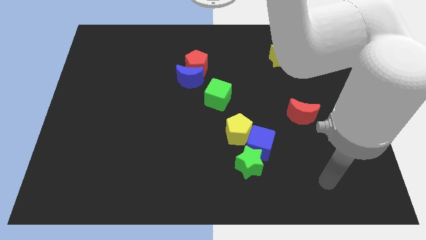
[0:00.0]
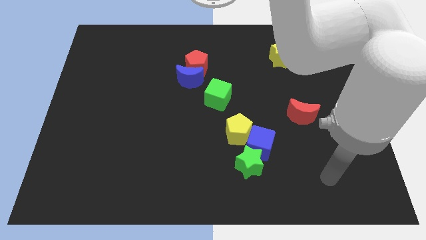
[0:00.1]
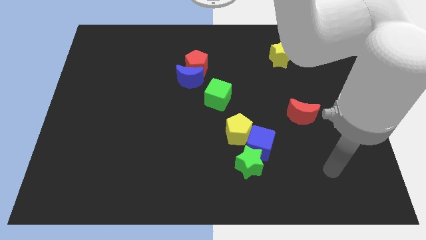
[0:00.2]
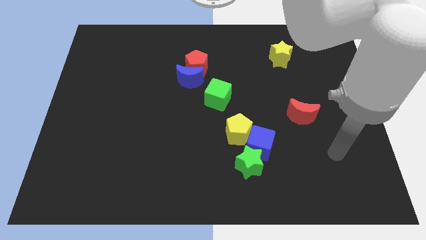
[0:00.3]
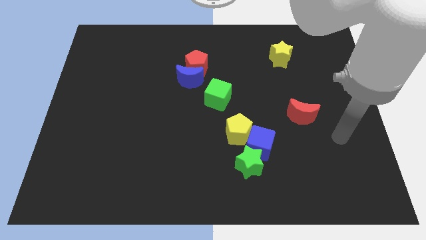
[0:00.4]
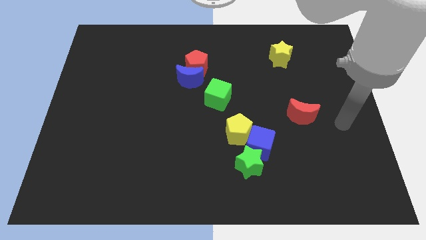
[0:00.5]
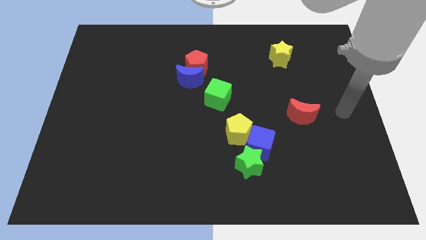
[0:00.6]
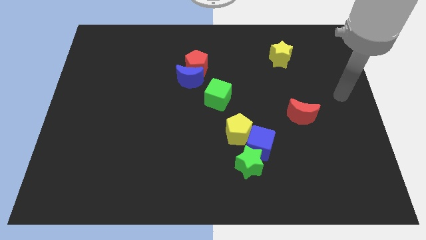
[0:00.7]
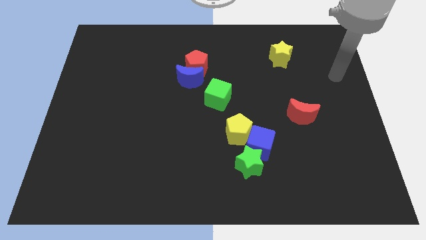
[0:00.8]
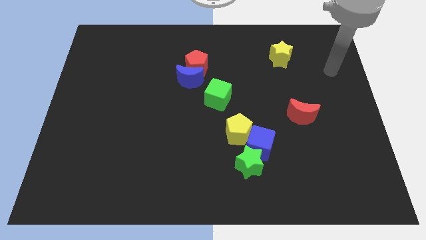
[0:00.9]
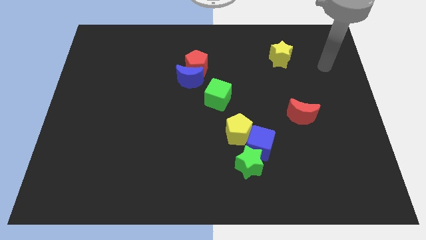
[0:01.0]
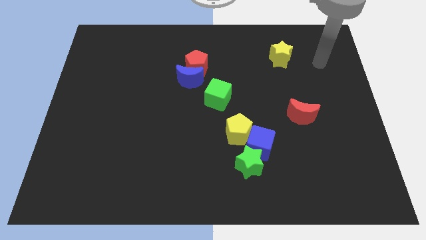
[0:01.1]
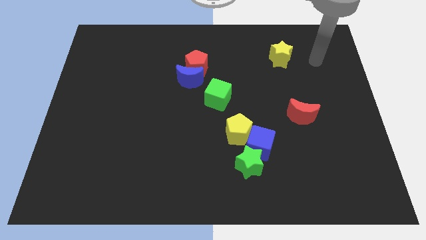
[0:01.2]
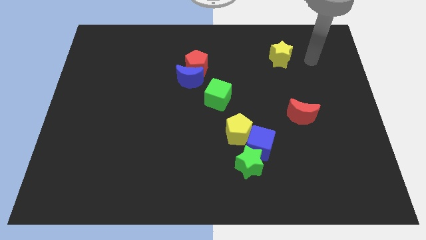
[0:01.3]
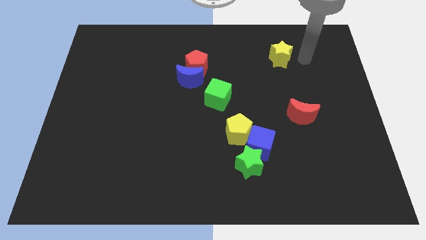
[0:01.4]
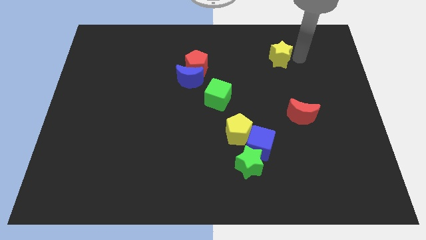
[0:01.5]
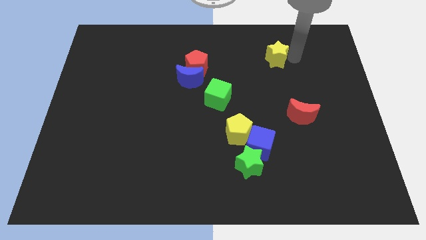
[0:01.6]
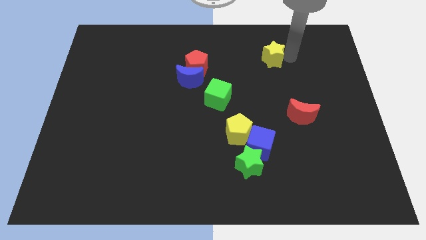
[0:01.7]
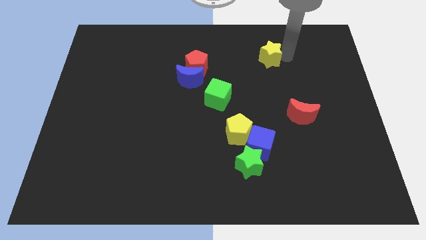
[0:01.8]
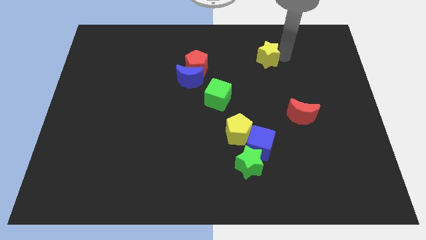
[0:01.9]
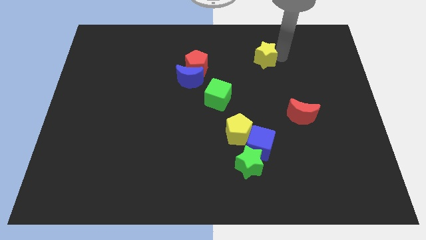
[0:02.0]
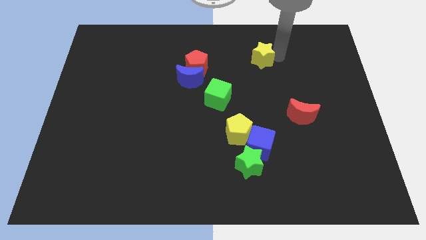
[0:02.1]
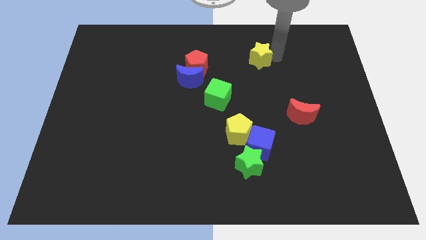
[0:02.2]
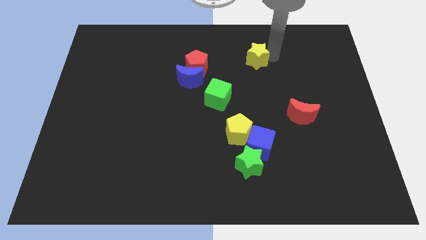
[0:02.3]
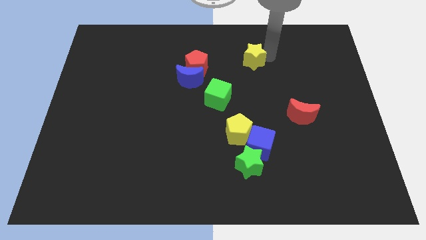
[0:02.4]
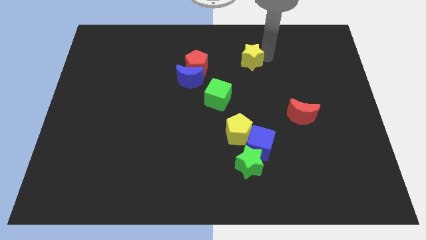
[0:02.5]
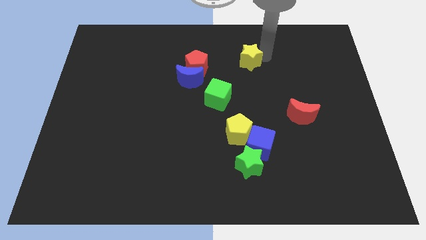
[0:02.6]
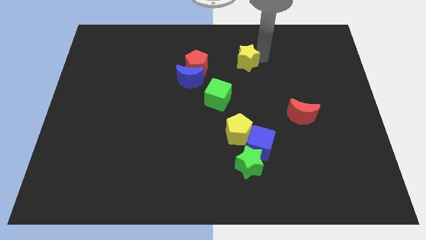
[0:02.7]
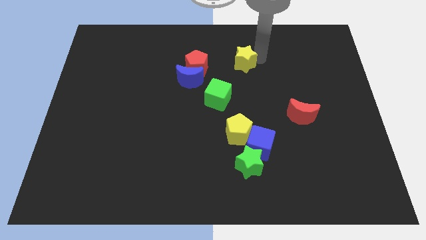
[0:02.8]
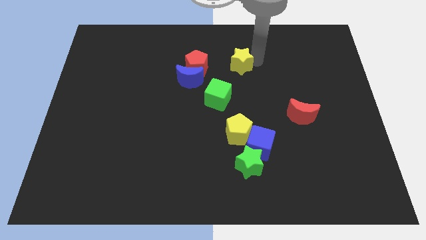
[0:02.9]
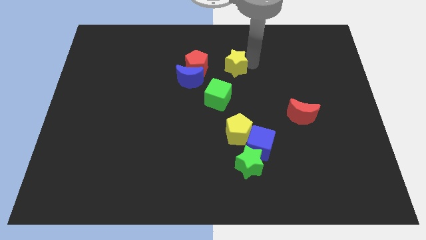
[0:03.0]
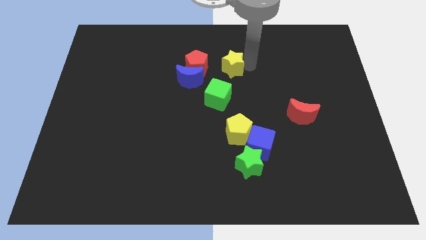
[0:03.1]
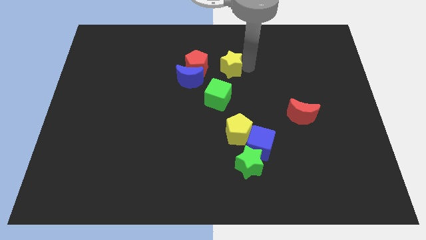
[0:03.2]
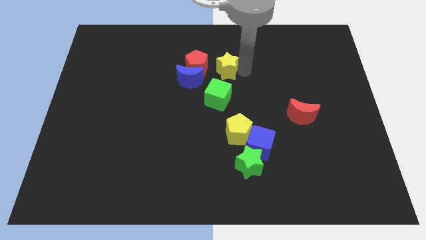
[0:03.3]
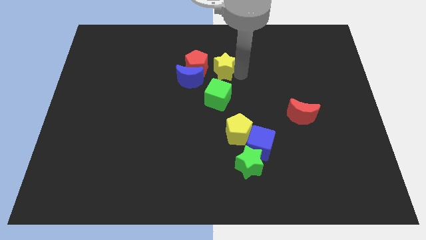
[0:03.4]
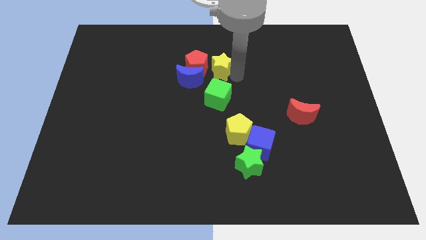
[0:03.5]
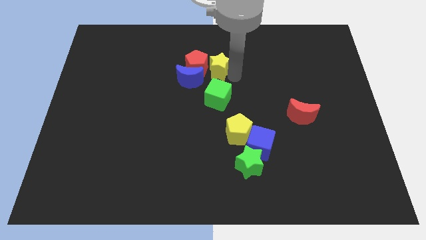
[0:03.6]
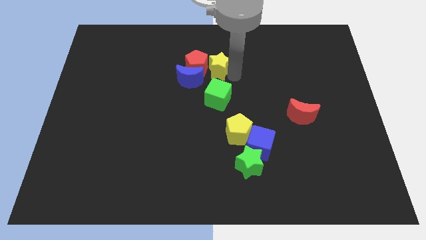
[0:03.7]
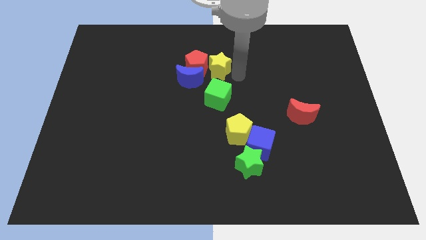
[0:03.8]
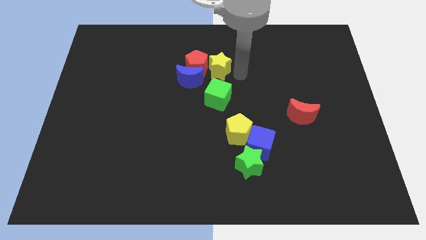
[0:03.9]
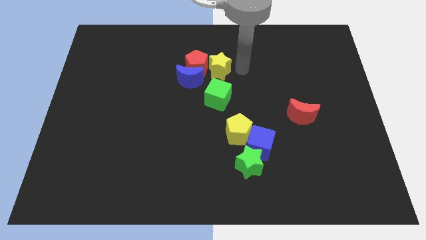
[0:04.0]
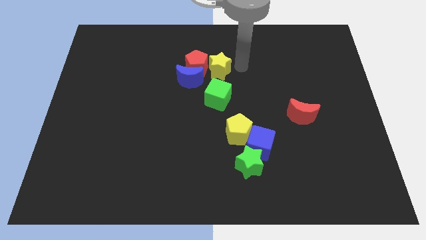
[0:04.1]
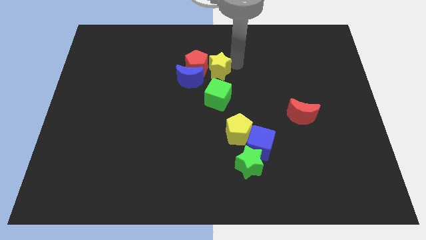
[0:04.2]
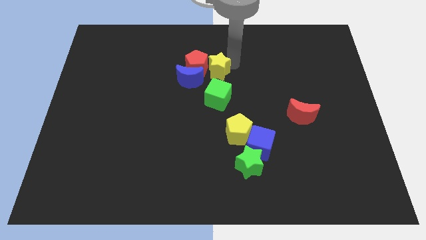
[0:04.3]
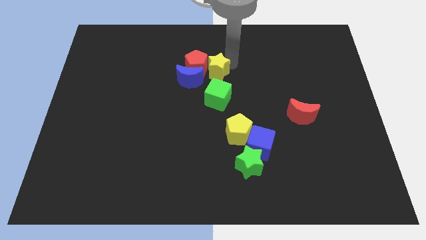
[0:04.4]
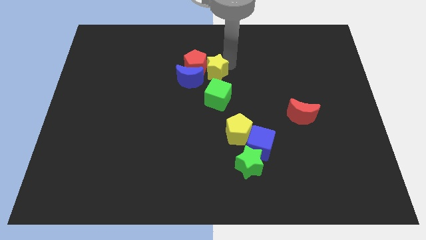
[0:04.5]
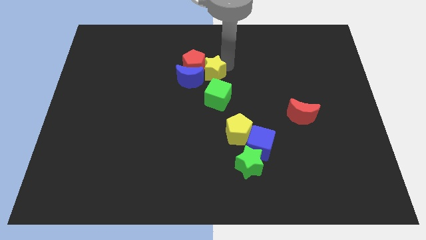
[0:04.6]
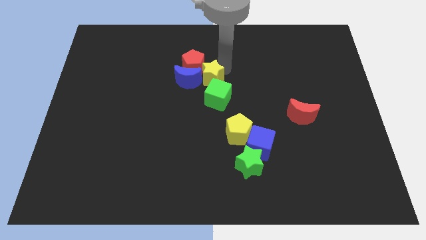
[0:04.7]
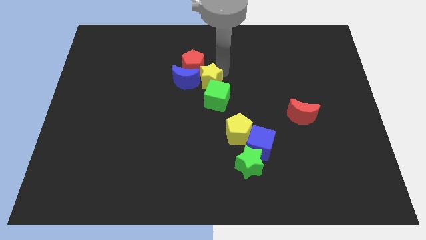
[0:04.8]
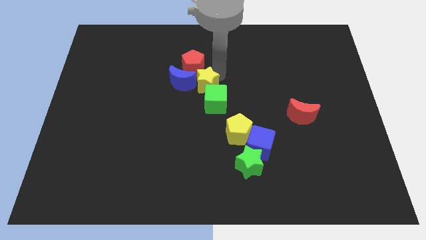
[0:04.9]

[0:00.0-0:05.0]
slide the yellow star next to the blue moon

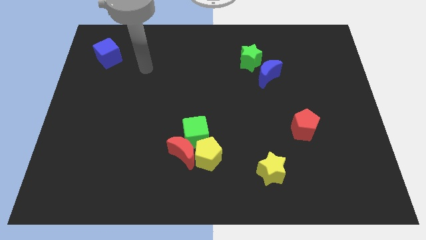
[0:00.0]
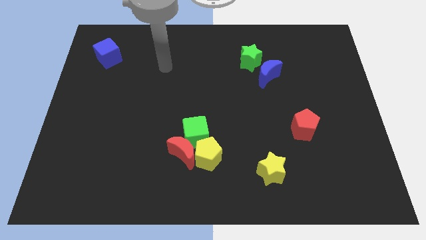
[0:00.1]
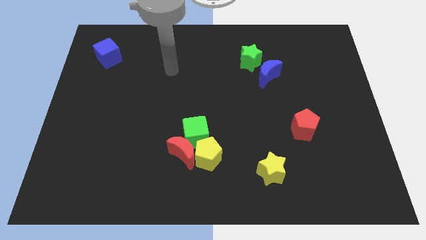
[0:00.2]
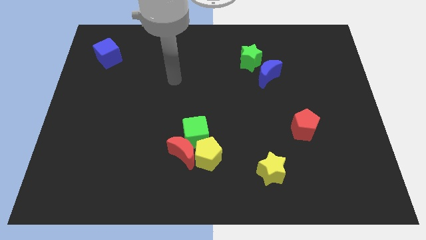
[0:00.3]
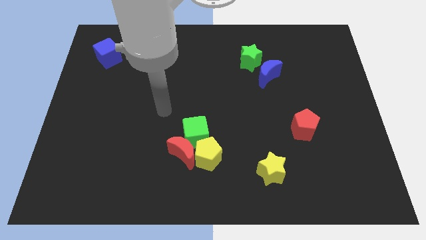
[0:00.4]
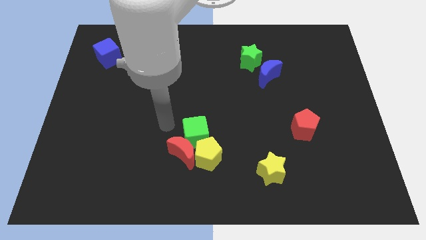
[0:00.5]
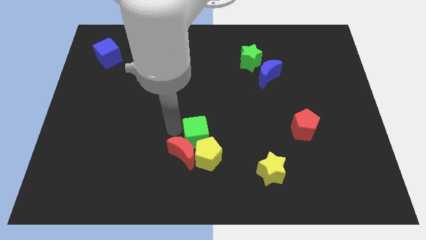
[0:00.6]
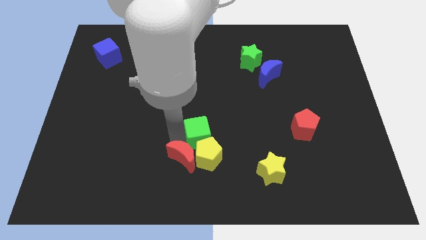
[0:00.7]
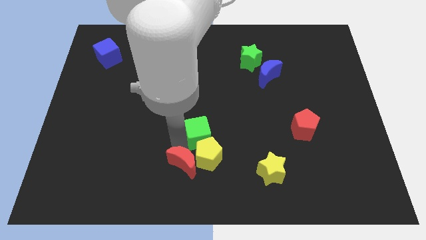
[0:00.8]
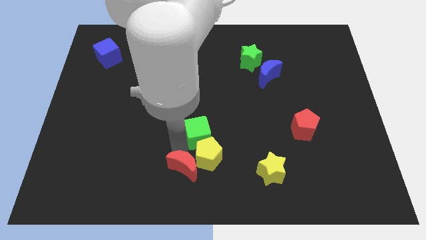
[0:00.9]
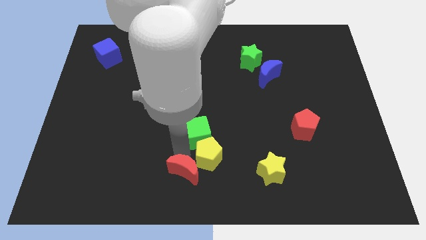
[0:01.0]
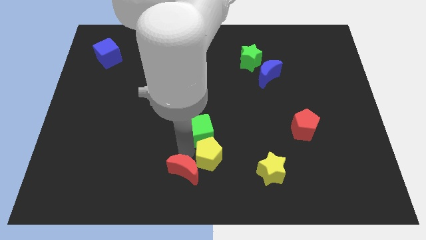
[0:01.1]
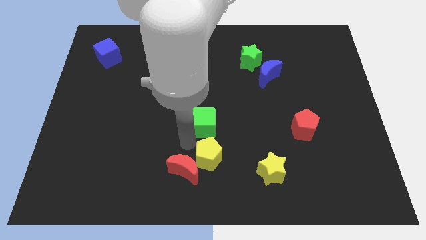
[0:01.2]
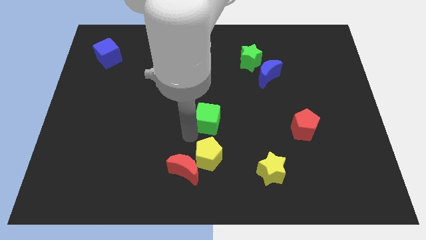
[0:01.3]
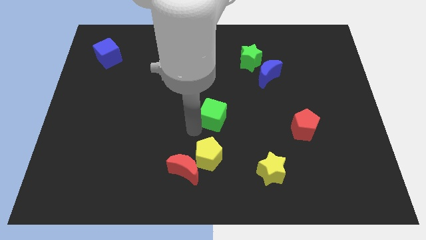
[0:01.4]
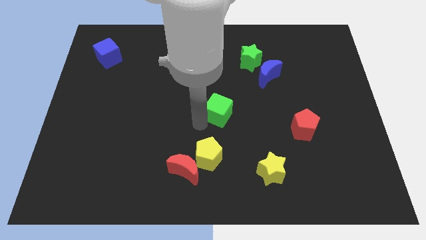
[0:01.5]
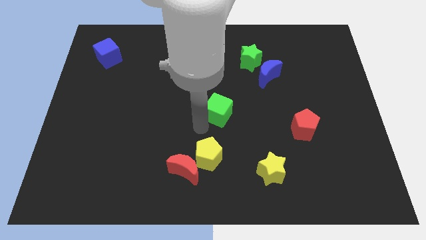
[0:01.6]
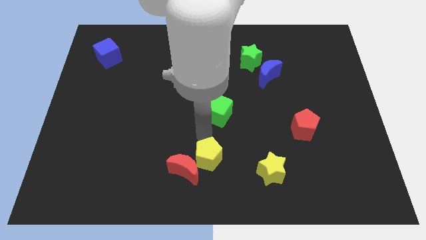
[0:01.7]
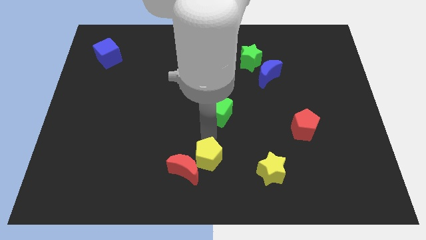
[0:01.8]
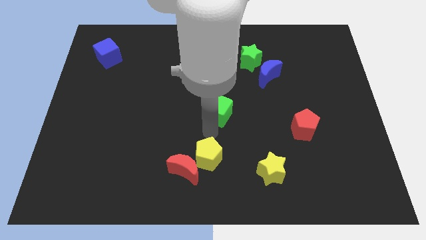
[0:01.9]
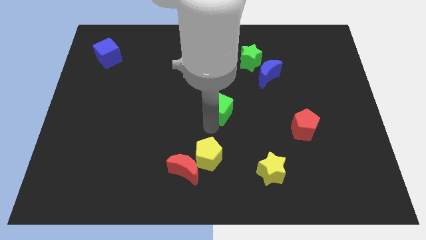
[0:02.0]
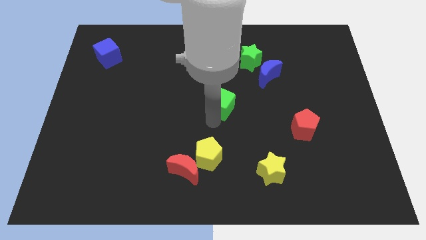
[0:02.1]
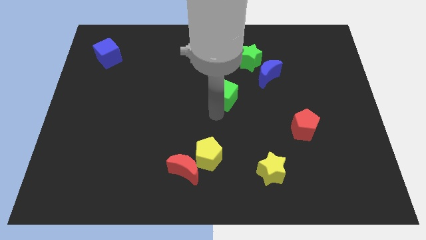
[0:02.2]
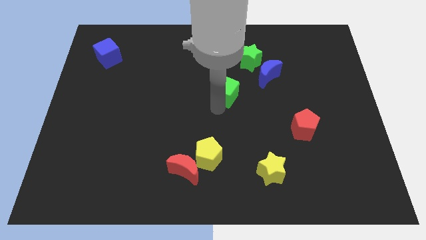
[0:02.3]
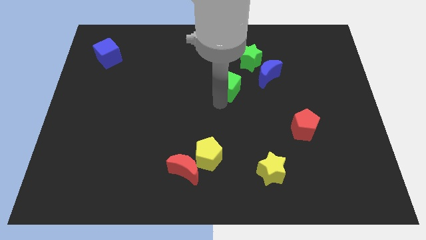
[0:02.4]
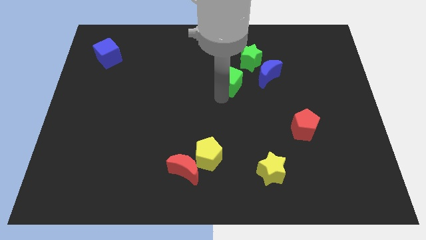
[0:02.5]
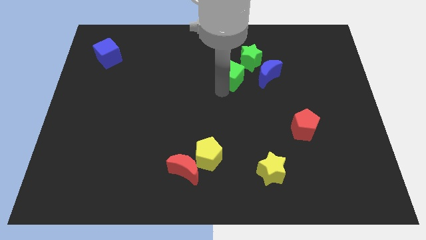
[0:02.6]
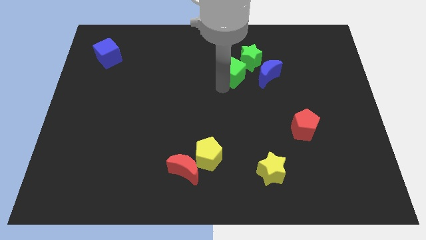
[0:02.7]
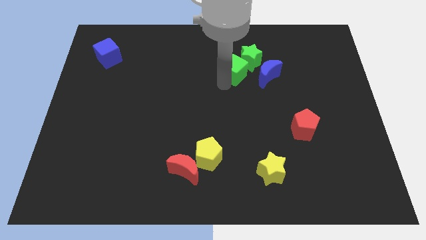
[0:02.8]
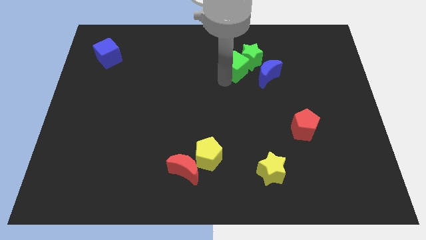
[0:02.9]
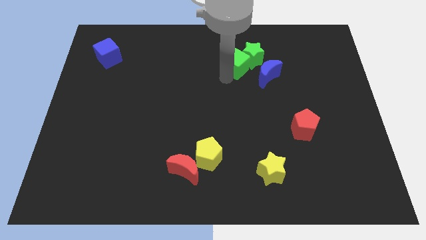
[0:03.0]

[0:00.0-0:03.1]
slide the green cube next to the green star
